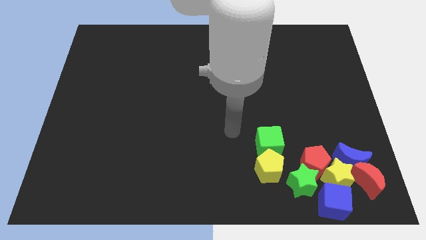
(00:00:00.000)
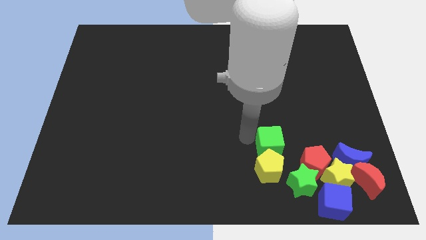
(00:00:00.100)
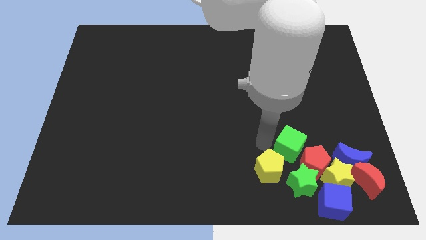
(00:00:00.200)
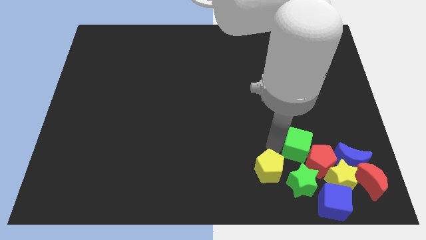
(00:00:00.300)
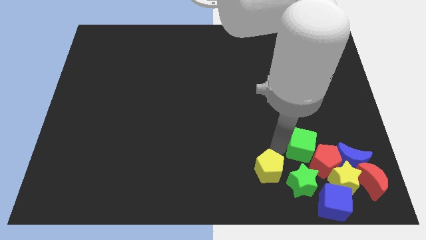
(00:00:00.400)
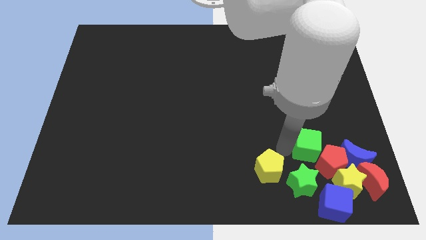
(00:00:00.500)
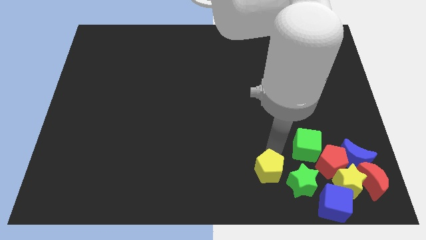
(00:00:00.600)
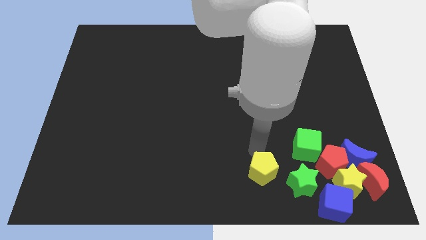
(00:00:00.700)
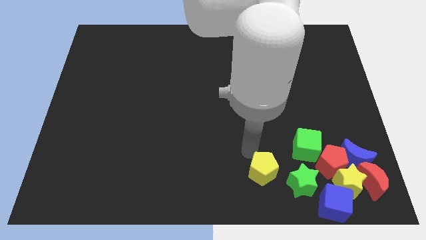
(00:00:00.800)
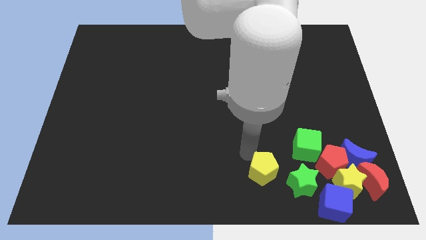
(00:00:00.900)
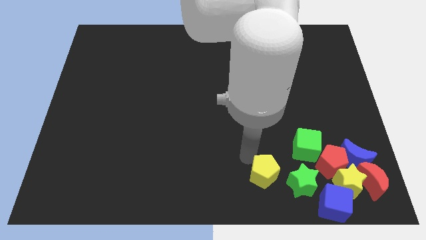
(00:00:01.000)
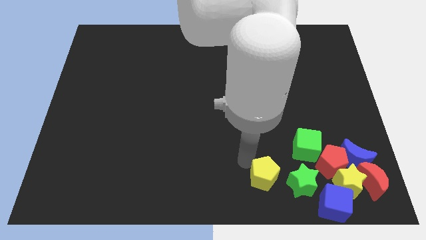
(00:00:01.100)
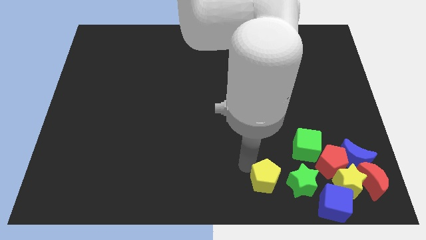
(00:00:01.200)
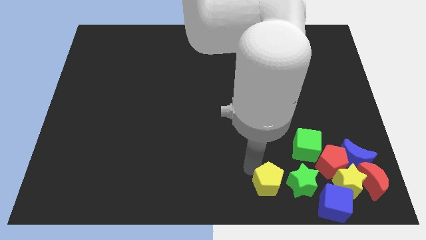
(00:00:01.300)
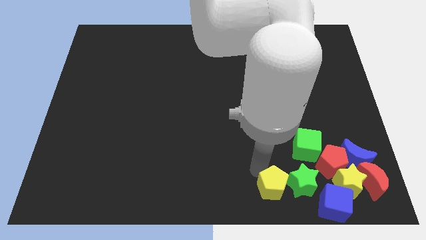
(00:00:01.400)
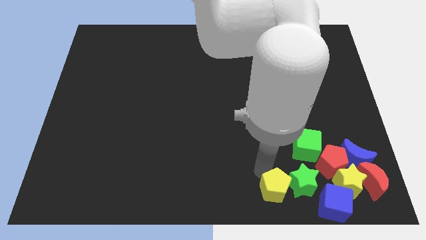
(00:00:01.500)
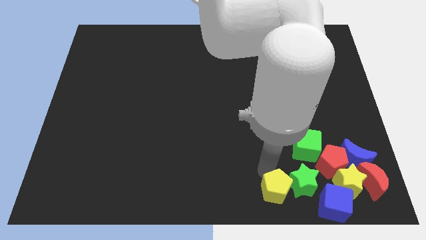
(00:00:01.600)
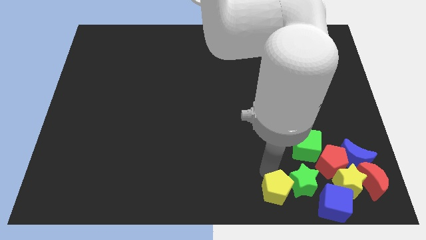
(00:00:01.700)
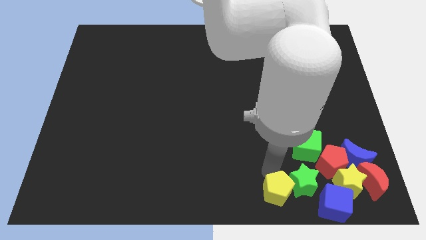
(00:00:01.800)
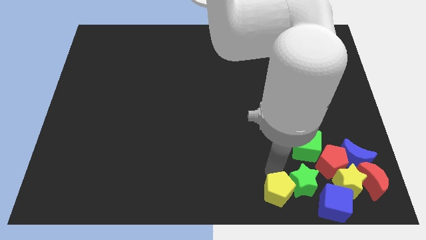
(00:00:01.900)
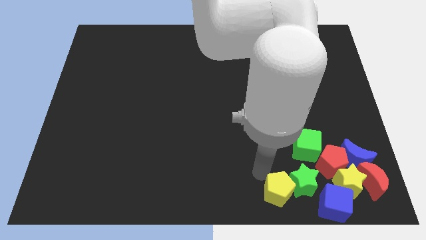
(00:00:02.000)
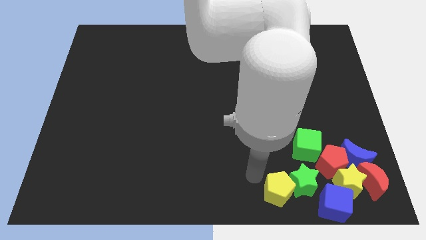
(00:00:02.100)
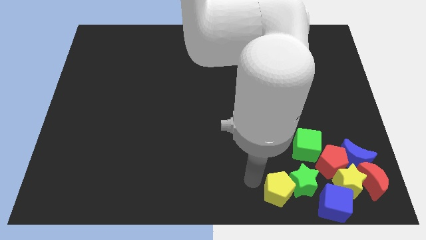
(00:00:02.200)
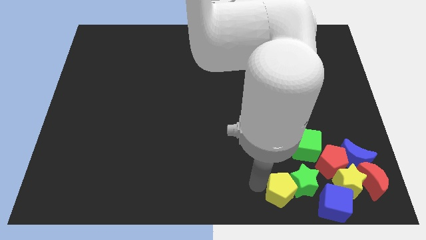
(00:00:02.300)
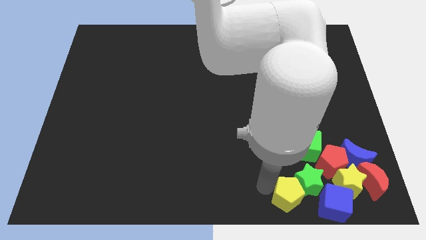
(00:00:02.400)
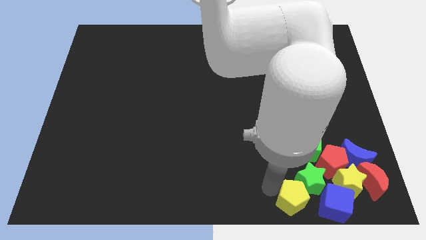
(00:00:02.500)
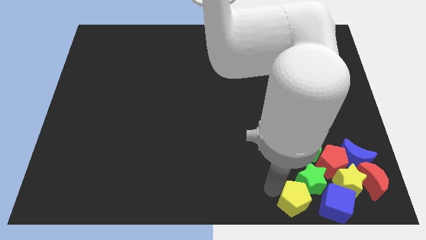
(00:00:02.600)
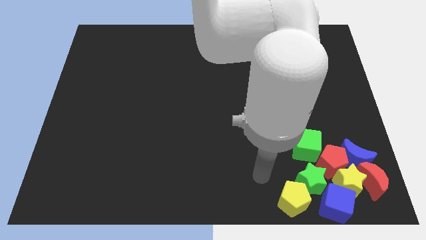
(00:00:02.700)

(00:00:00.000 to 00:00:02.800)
move the green cube into red pentagon and yellow pentagon into the green star

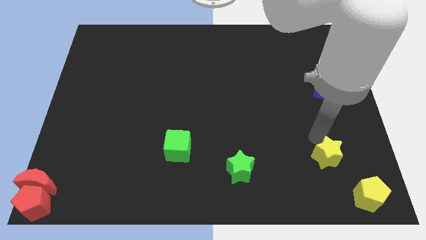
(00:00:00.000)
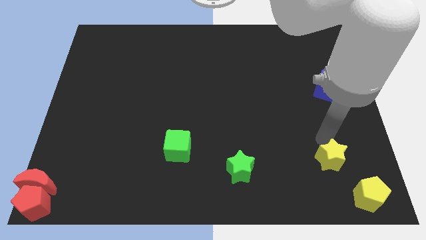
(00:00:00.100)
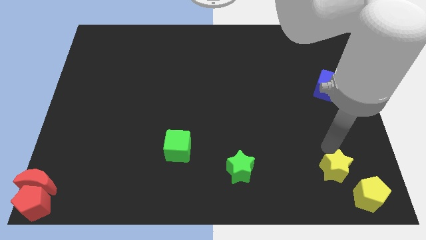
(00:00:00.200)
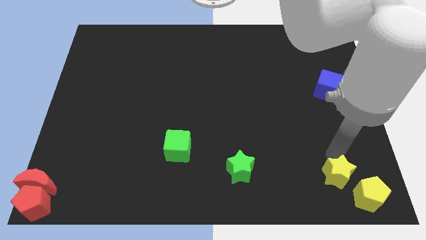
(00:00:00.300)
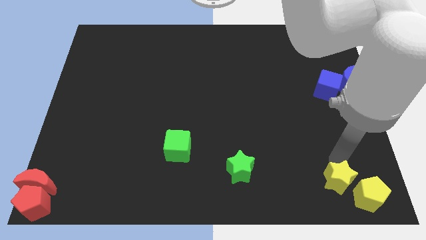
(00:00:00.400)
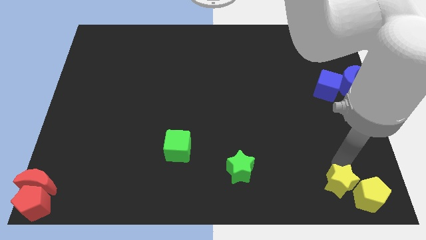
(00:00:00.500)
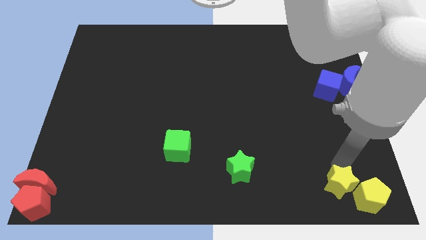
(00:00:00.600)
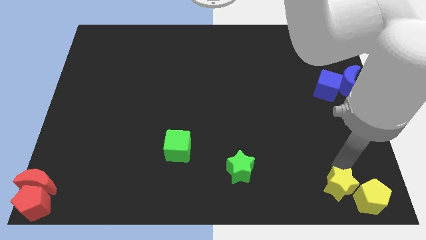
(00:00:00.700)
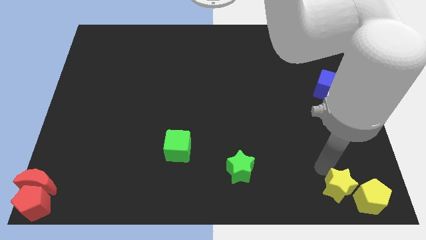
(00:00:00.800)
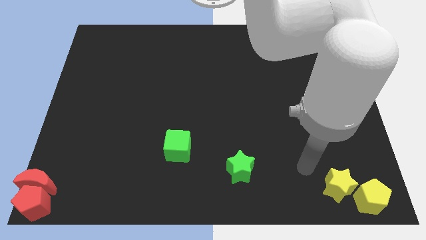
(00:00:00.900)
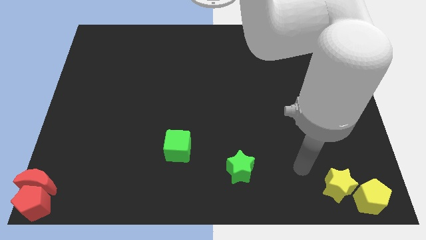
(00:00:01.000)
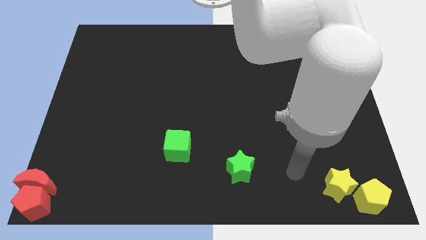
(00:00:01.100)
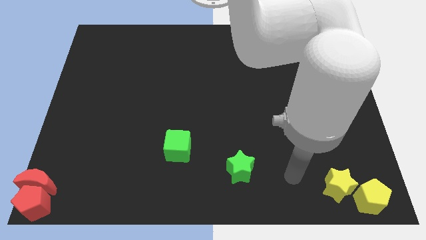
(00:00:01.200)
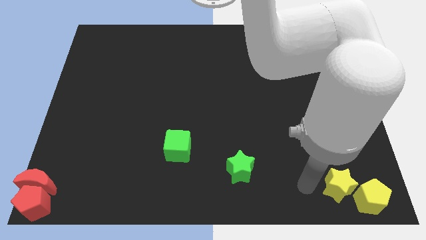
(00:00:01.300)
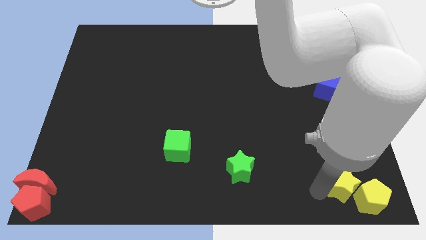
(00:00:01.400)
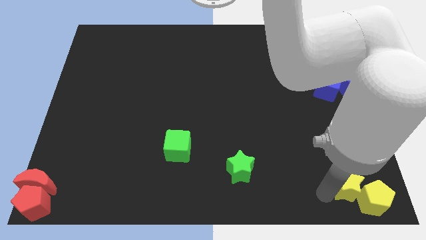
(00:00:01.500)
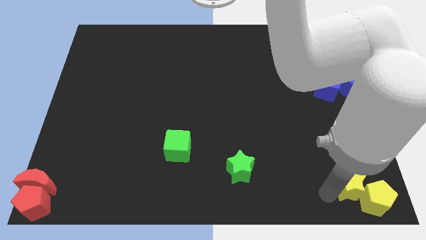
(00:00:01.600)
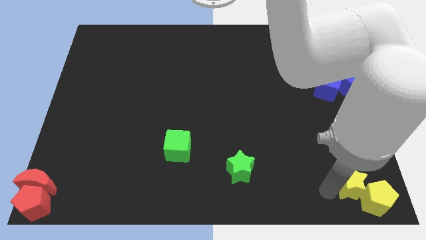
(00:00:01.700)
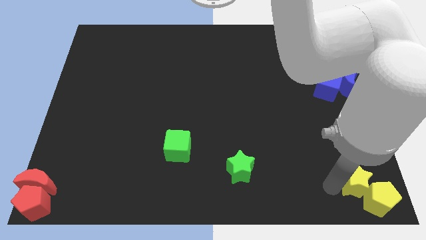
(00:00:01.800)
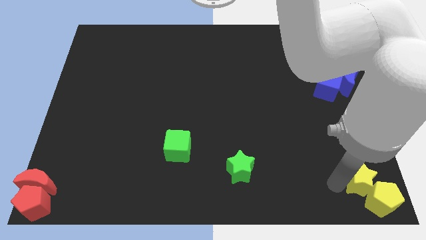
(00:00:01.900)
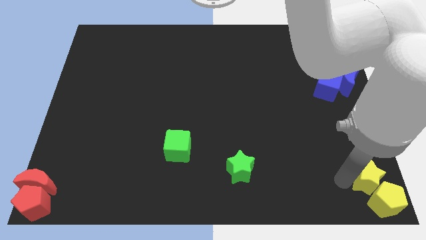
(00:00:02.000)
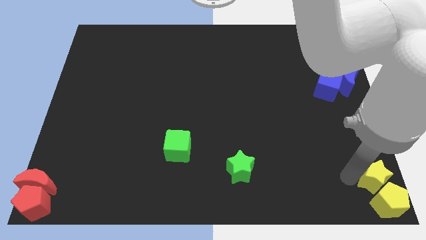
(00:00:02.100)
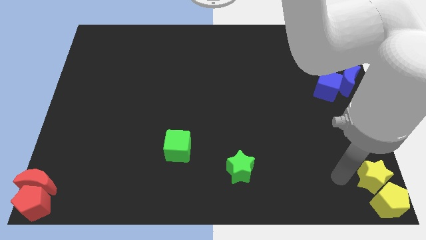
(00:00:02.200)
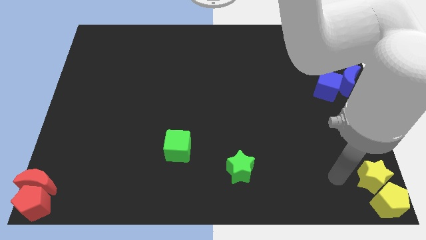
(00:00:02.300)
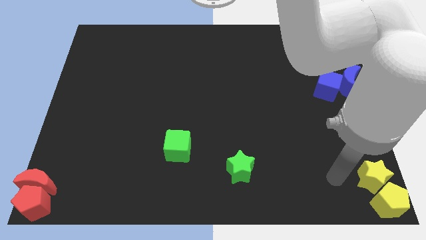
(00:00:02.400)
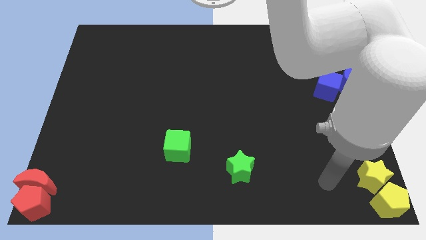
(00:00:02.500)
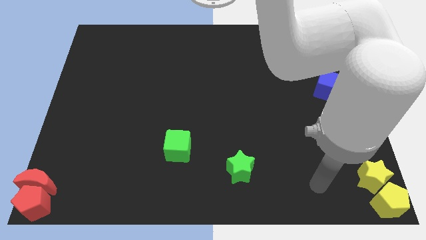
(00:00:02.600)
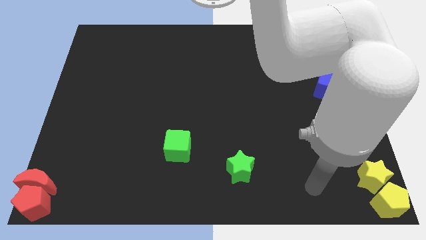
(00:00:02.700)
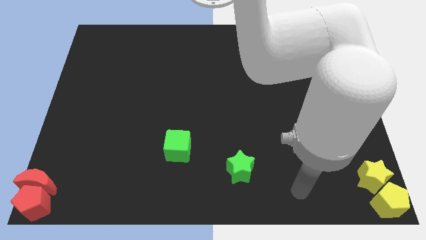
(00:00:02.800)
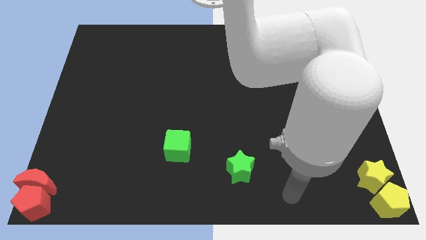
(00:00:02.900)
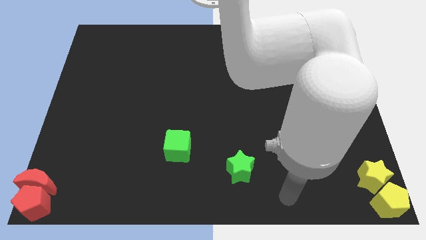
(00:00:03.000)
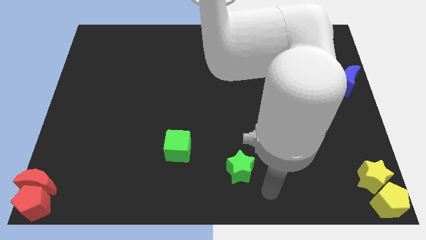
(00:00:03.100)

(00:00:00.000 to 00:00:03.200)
push the yellow pentagon with the help of yellow star to the bottom right of the board

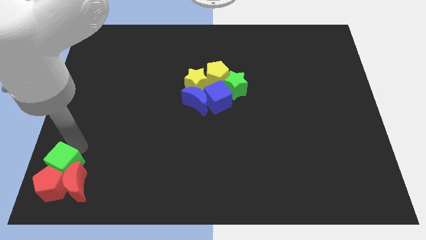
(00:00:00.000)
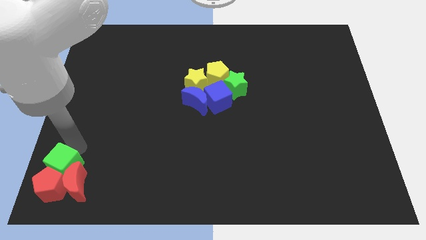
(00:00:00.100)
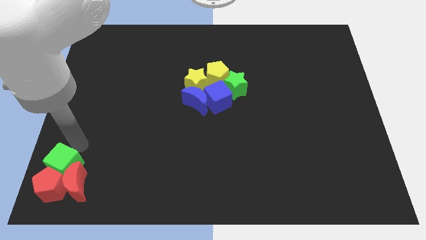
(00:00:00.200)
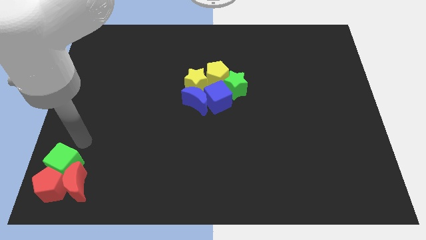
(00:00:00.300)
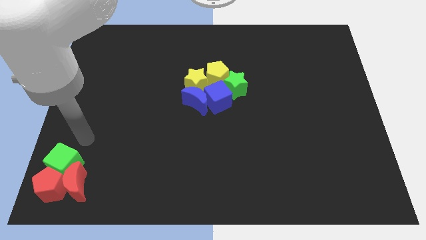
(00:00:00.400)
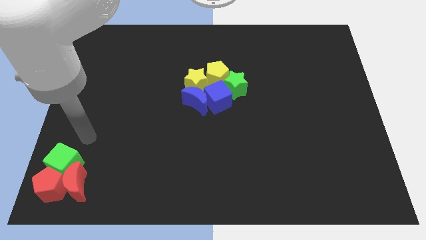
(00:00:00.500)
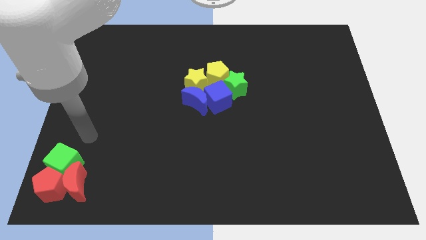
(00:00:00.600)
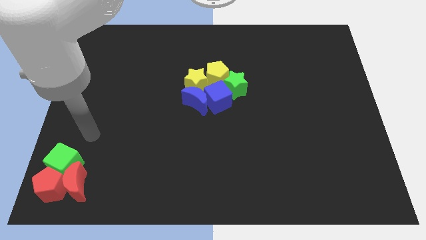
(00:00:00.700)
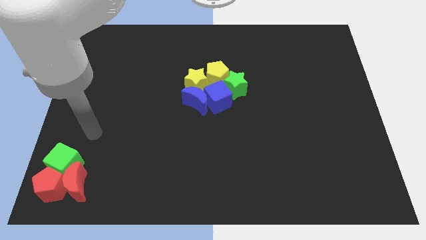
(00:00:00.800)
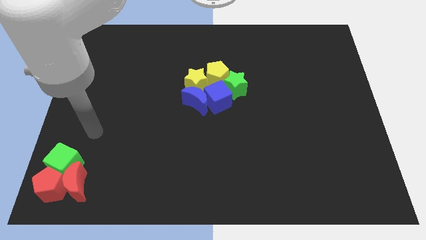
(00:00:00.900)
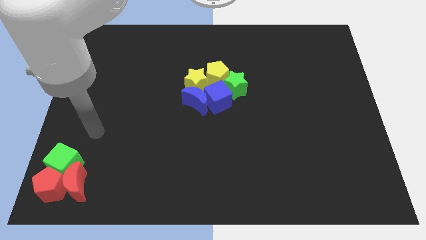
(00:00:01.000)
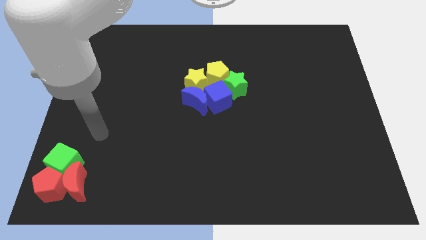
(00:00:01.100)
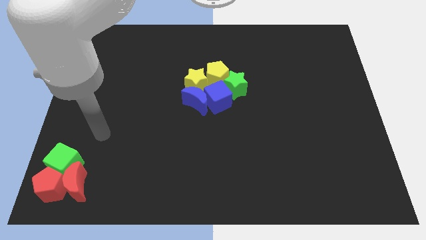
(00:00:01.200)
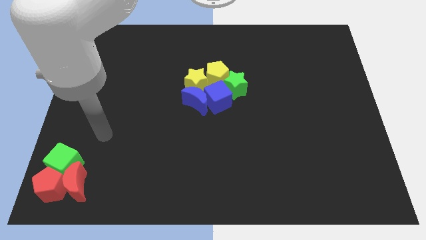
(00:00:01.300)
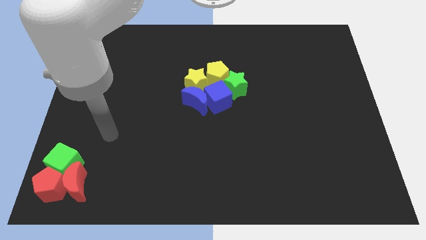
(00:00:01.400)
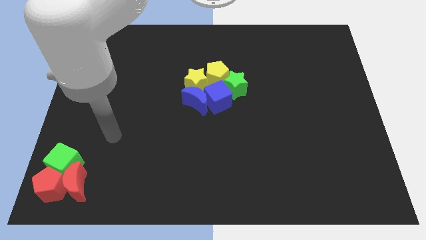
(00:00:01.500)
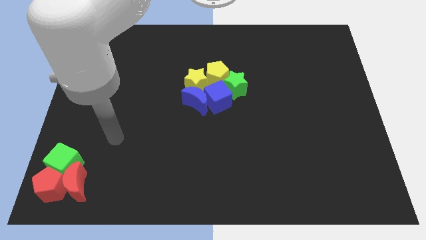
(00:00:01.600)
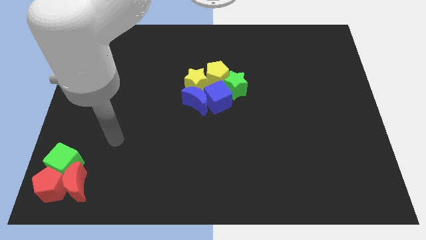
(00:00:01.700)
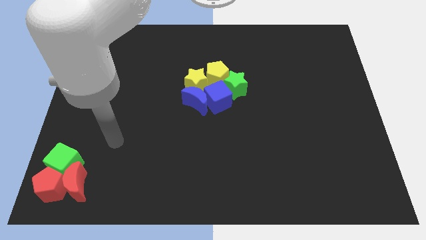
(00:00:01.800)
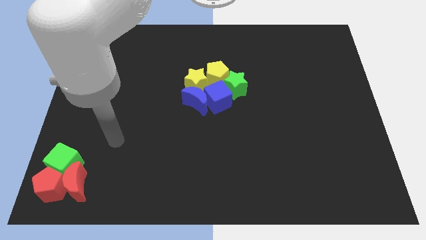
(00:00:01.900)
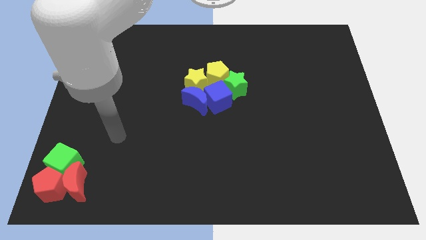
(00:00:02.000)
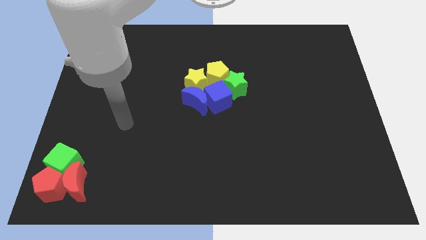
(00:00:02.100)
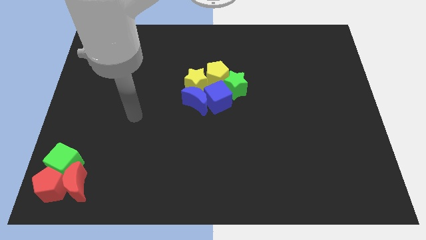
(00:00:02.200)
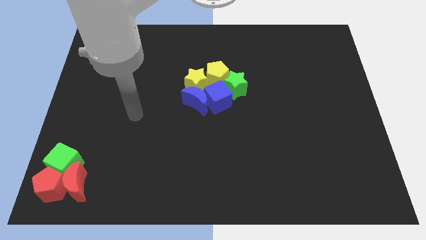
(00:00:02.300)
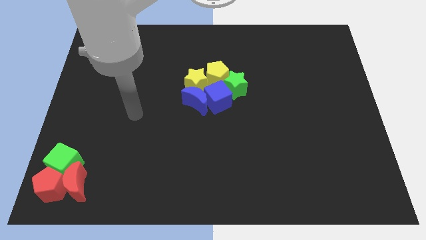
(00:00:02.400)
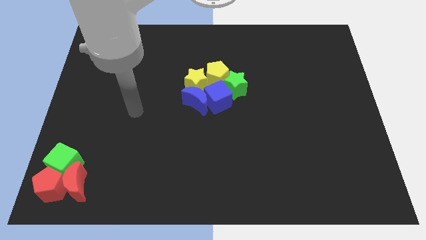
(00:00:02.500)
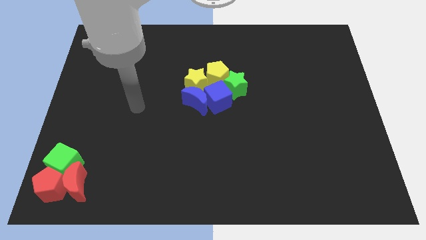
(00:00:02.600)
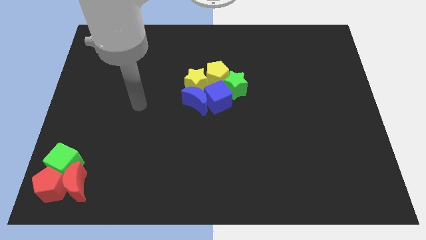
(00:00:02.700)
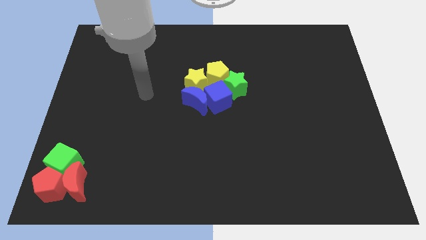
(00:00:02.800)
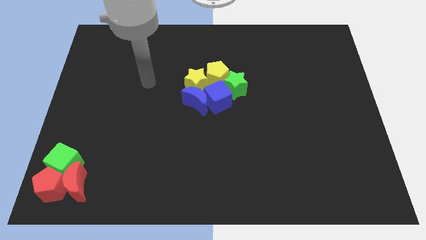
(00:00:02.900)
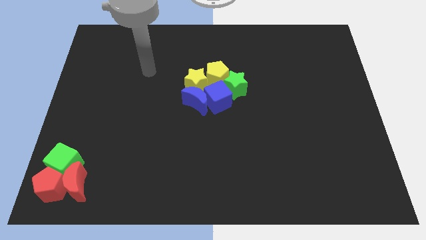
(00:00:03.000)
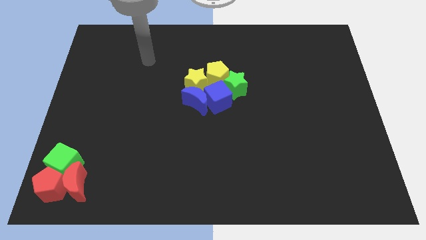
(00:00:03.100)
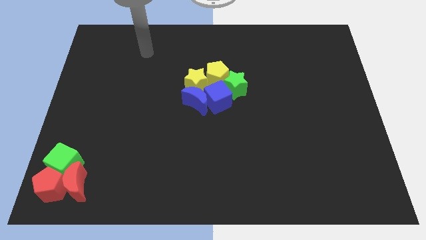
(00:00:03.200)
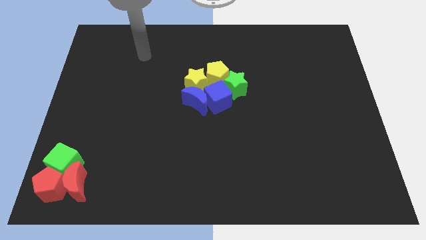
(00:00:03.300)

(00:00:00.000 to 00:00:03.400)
move the arm to the top of the board
